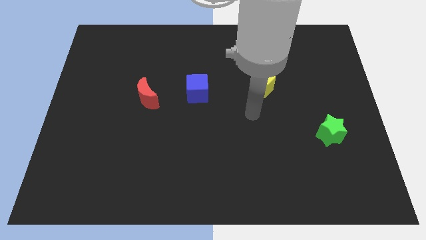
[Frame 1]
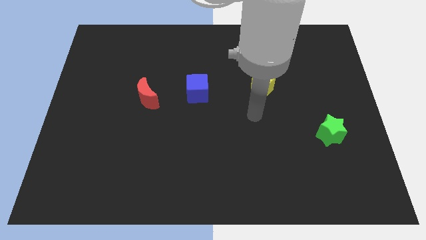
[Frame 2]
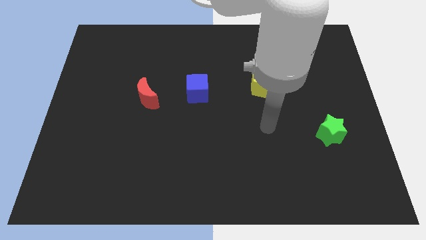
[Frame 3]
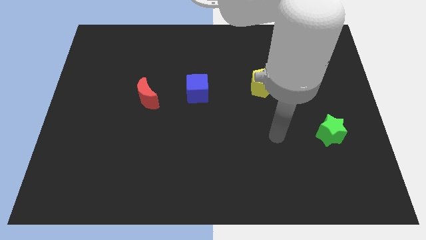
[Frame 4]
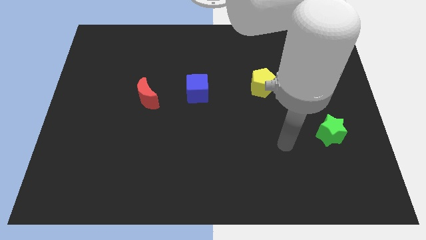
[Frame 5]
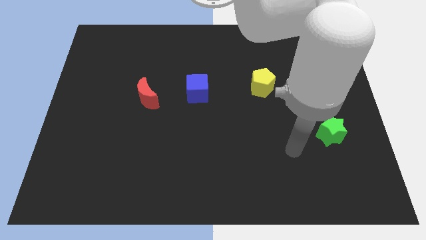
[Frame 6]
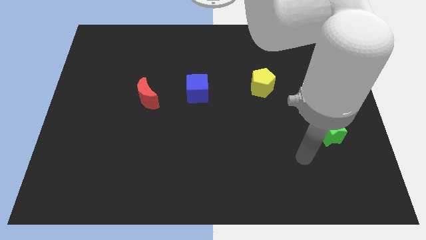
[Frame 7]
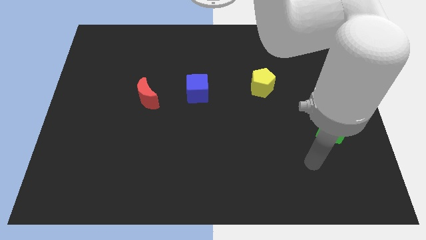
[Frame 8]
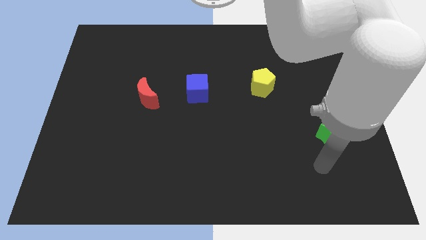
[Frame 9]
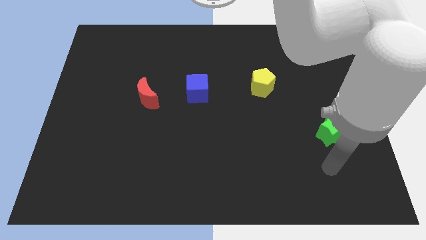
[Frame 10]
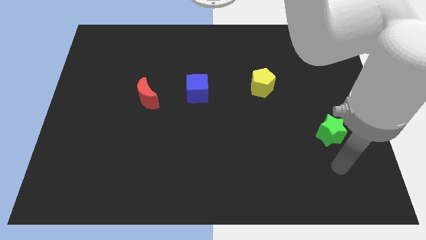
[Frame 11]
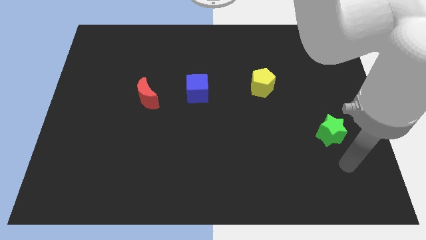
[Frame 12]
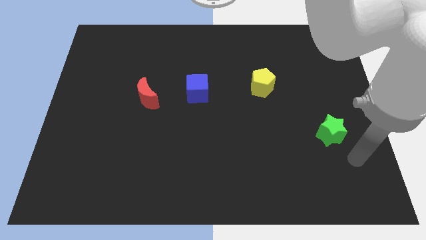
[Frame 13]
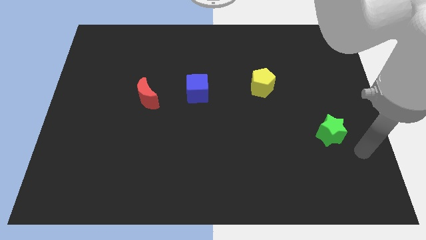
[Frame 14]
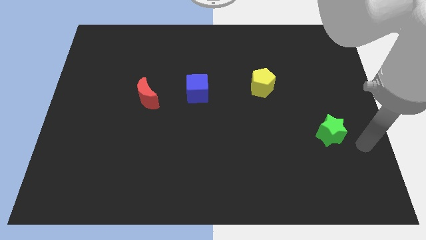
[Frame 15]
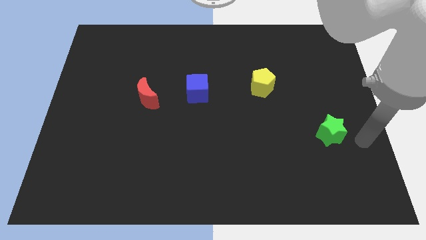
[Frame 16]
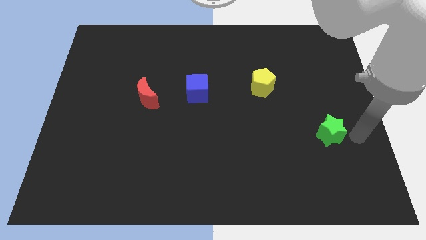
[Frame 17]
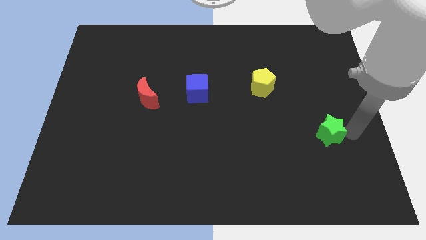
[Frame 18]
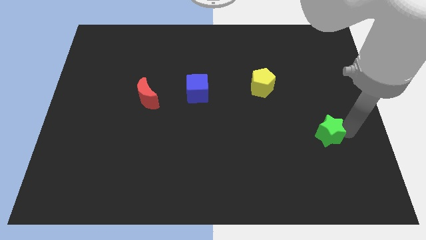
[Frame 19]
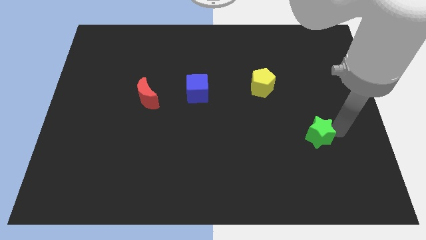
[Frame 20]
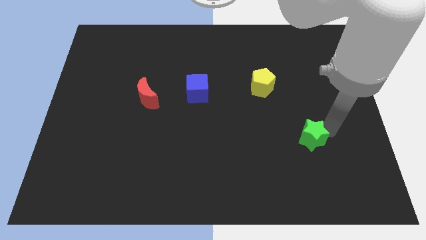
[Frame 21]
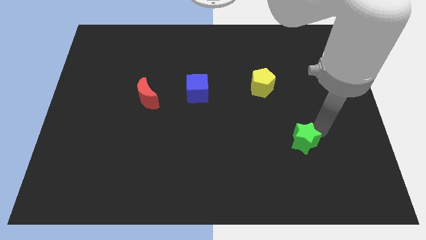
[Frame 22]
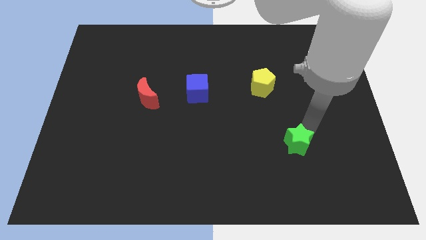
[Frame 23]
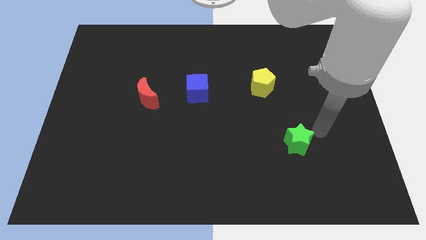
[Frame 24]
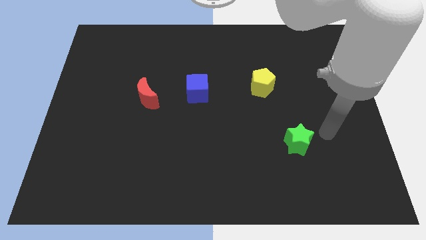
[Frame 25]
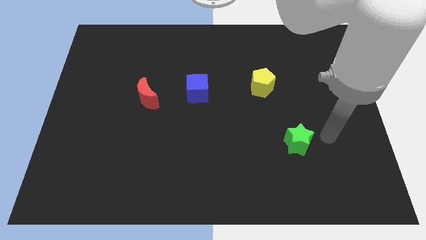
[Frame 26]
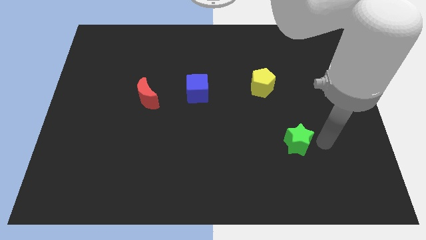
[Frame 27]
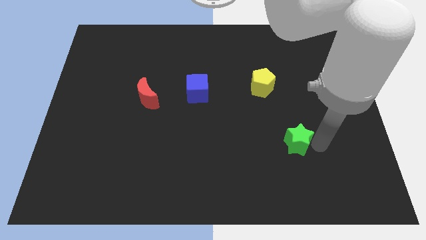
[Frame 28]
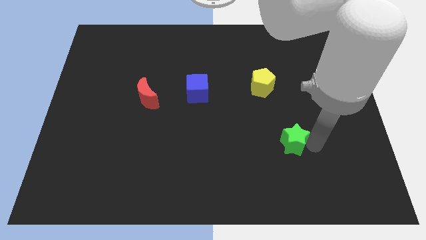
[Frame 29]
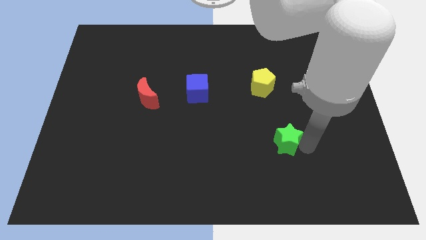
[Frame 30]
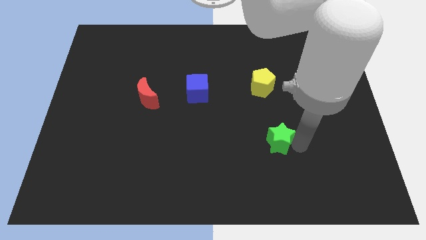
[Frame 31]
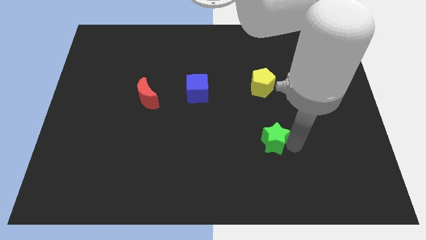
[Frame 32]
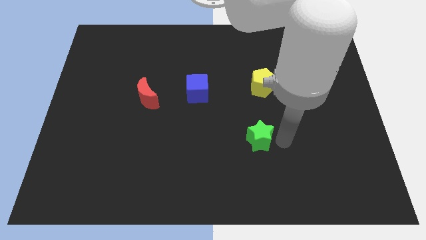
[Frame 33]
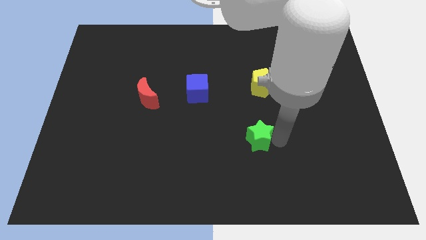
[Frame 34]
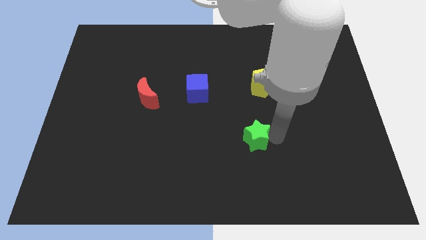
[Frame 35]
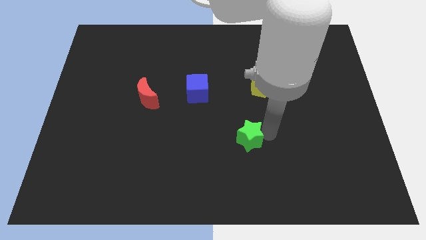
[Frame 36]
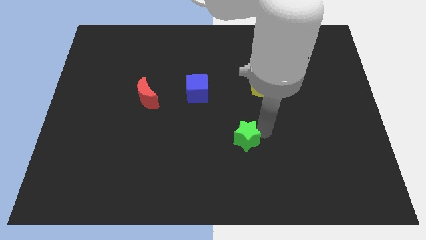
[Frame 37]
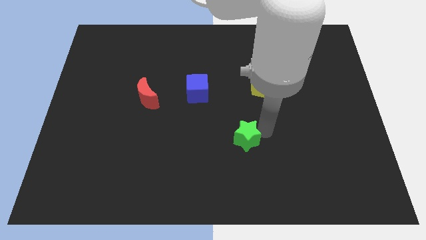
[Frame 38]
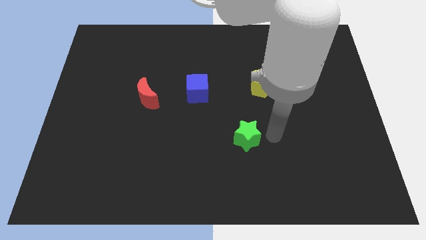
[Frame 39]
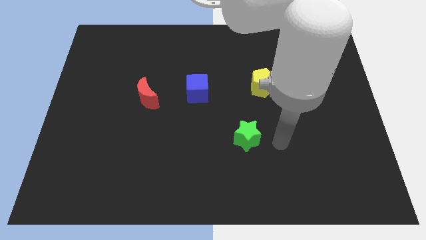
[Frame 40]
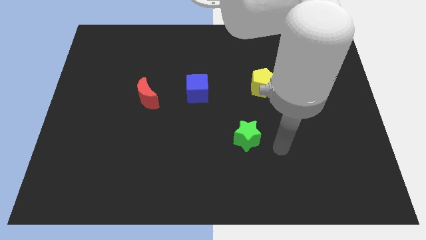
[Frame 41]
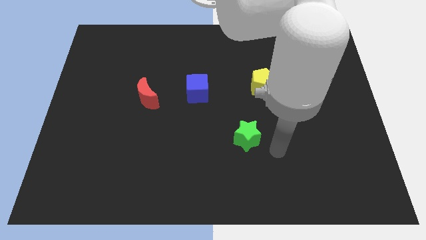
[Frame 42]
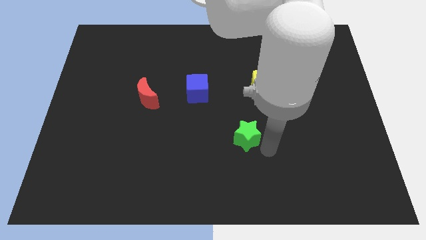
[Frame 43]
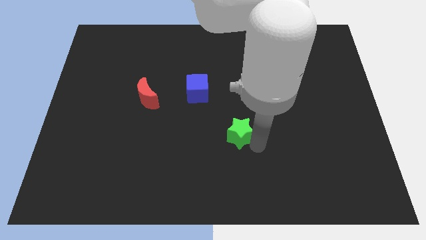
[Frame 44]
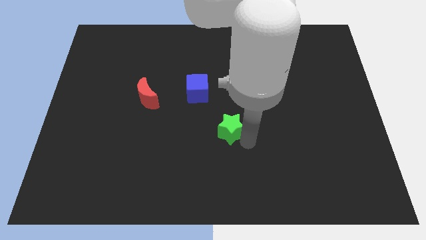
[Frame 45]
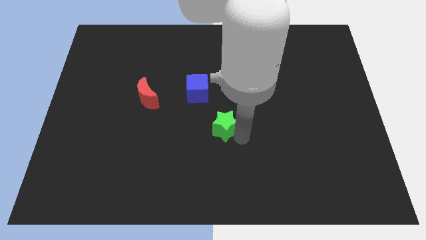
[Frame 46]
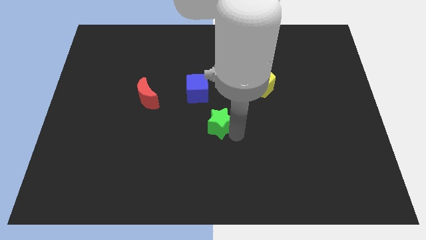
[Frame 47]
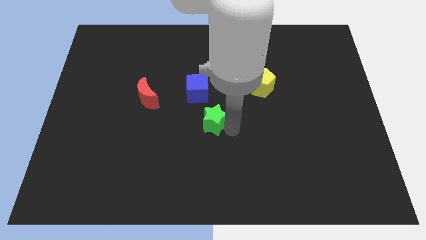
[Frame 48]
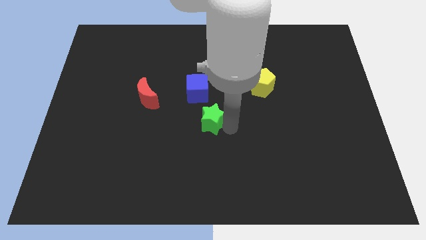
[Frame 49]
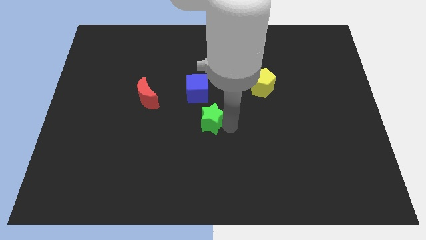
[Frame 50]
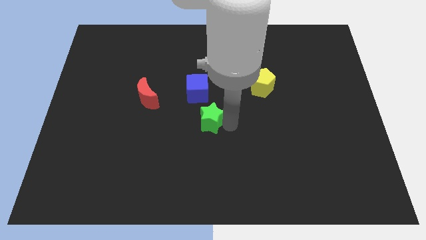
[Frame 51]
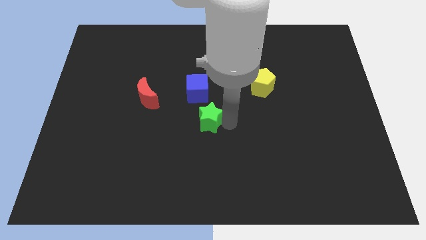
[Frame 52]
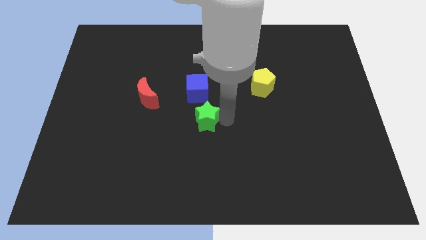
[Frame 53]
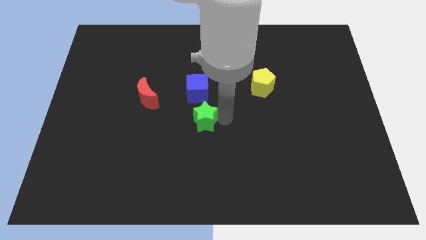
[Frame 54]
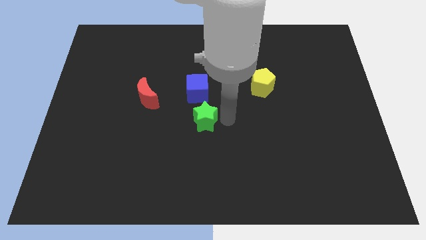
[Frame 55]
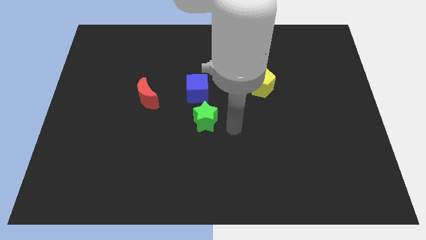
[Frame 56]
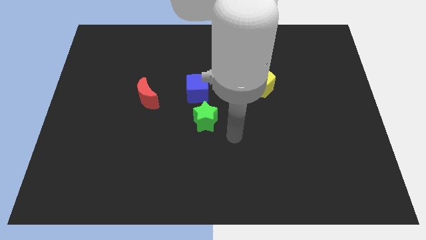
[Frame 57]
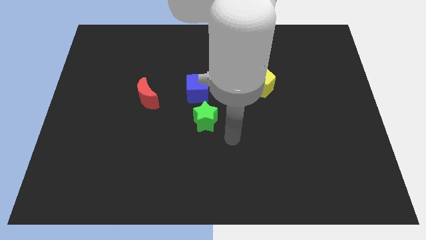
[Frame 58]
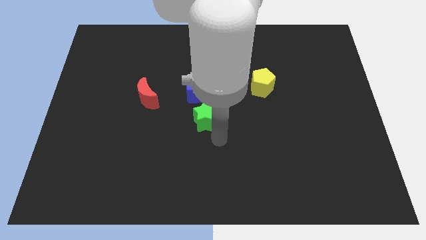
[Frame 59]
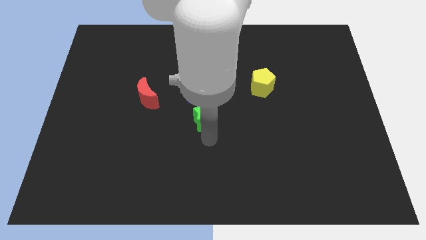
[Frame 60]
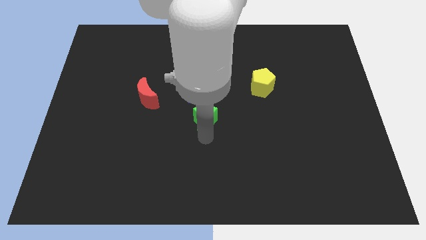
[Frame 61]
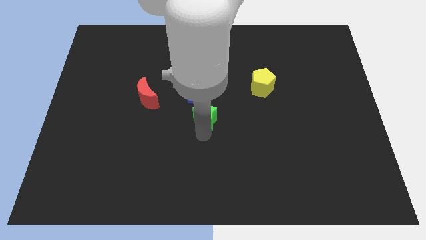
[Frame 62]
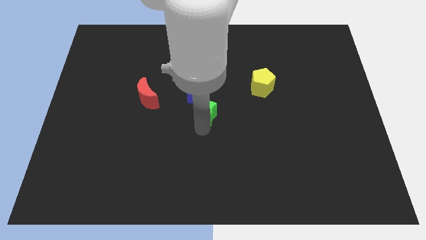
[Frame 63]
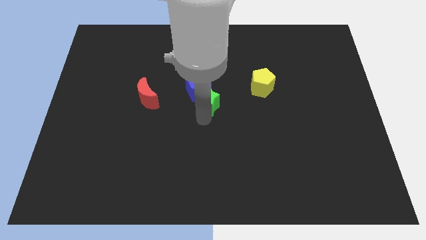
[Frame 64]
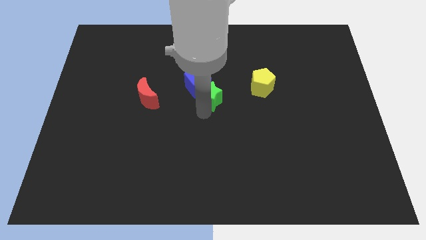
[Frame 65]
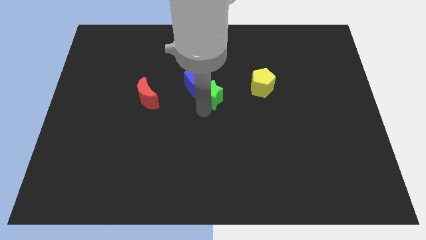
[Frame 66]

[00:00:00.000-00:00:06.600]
push the green block towards the blue block

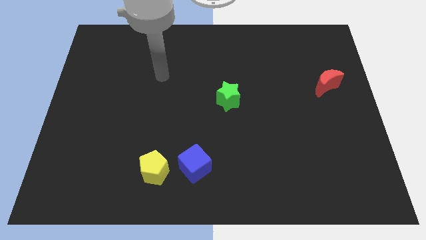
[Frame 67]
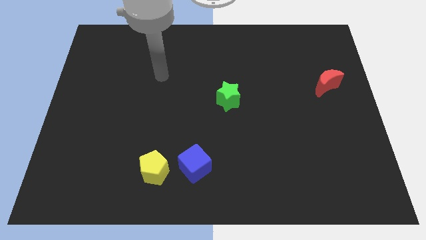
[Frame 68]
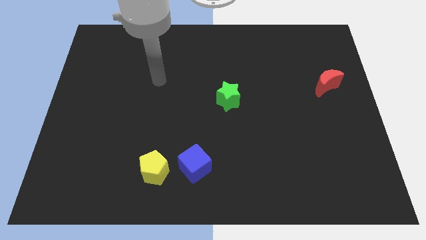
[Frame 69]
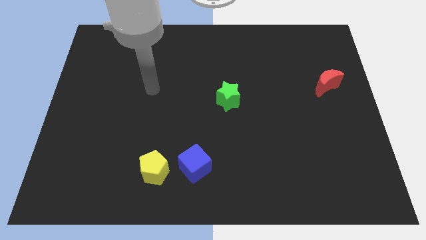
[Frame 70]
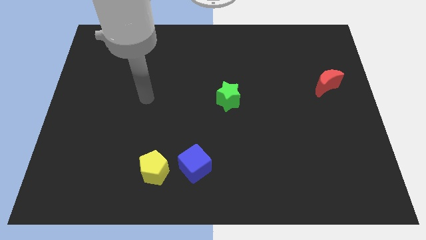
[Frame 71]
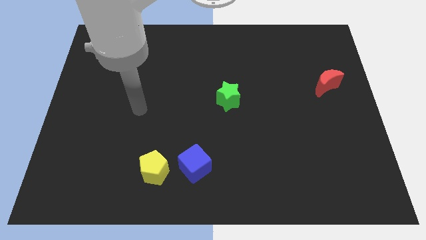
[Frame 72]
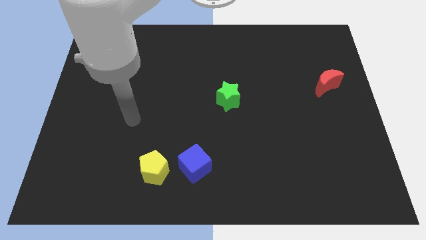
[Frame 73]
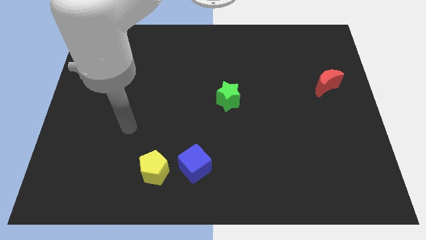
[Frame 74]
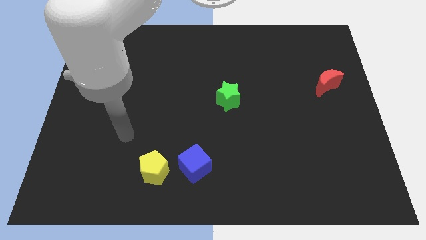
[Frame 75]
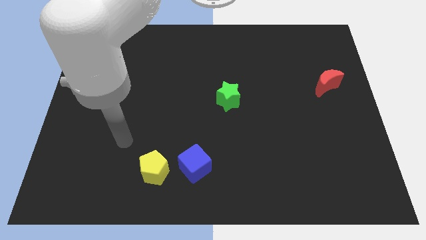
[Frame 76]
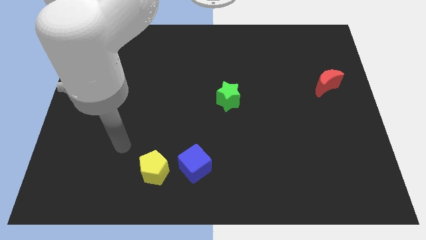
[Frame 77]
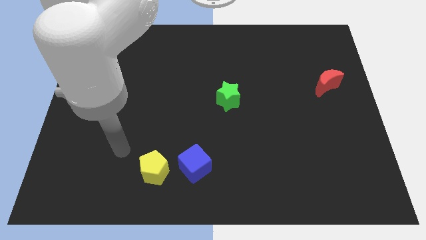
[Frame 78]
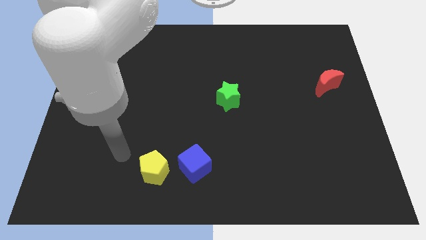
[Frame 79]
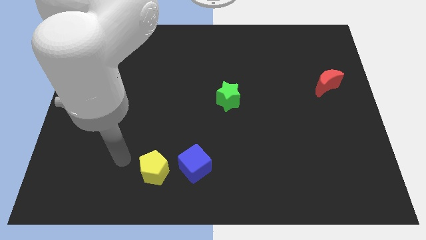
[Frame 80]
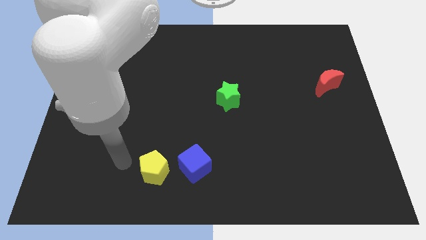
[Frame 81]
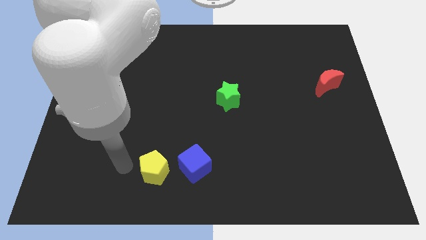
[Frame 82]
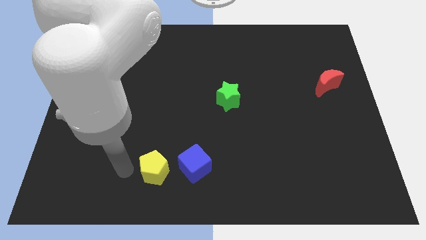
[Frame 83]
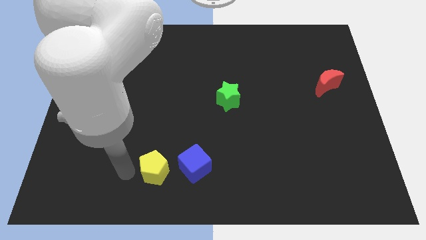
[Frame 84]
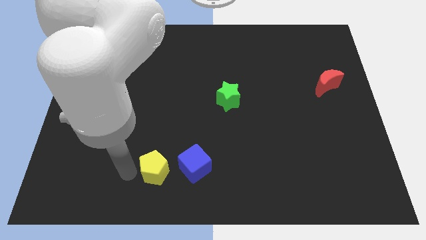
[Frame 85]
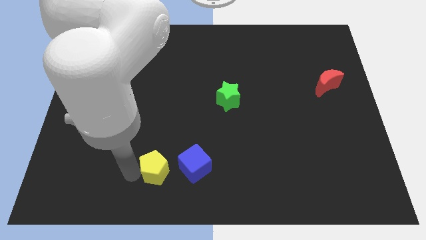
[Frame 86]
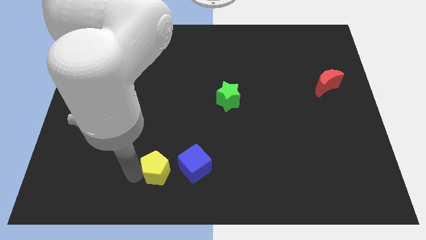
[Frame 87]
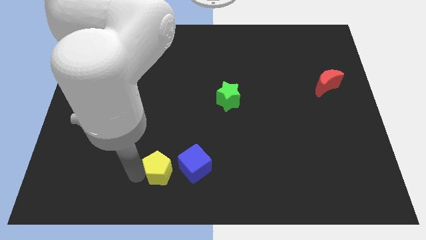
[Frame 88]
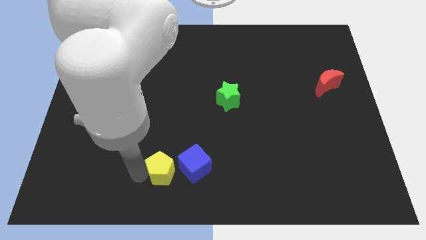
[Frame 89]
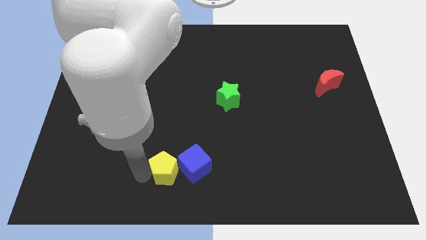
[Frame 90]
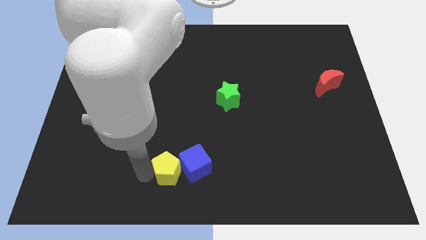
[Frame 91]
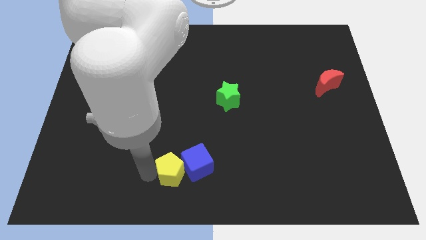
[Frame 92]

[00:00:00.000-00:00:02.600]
slide the yellow block next to the cube
